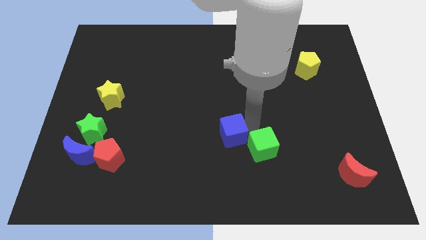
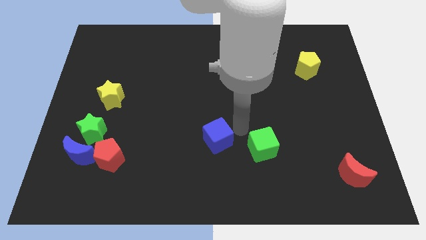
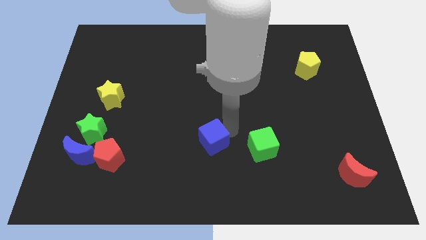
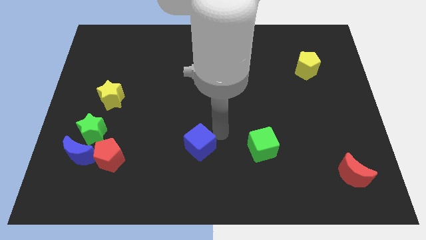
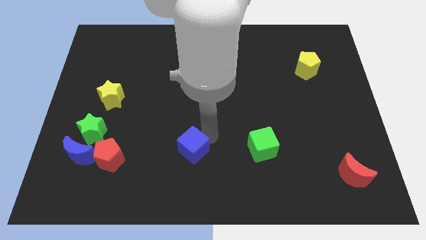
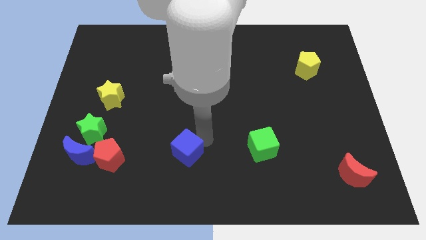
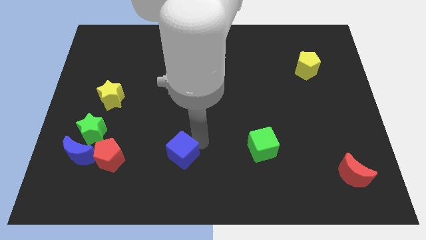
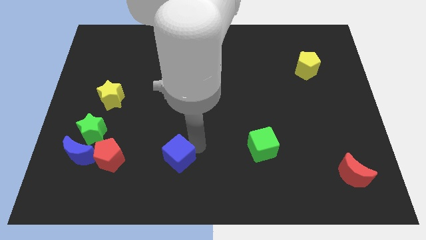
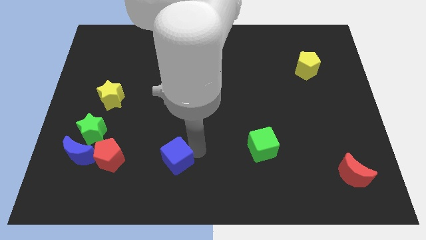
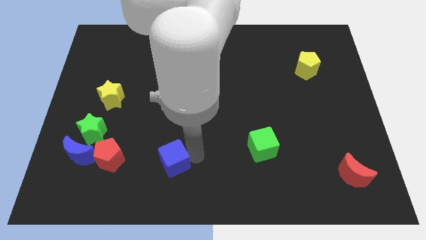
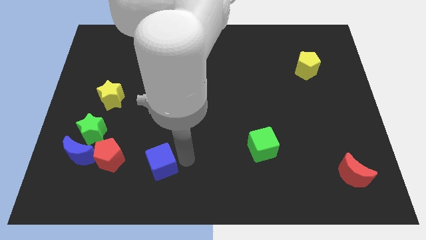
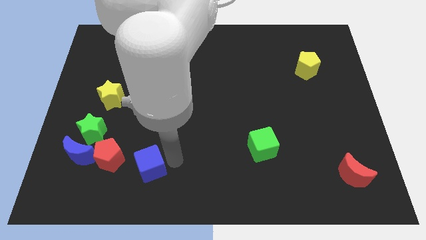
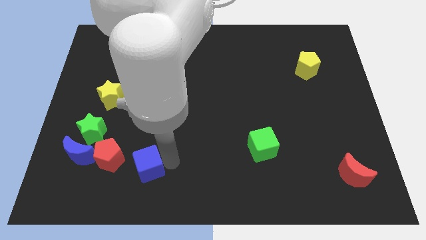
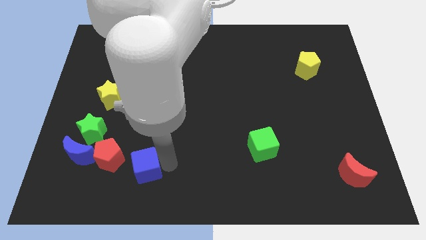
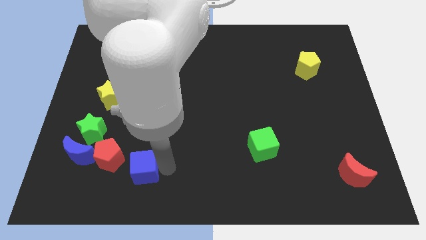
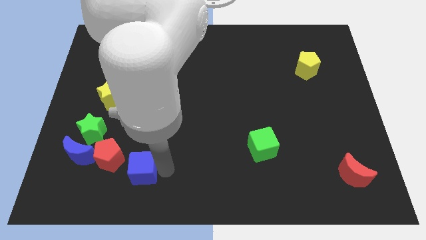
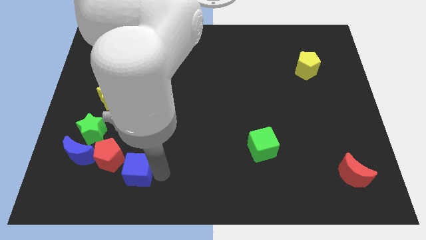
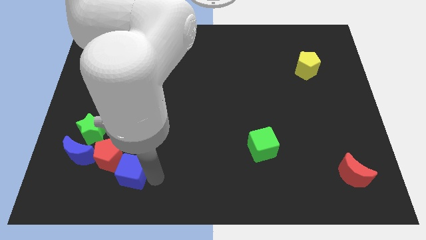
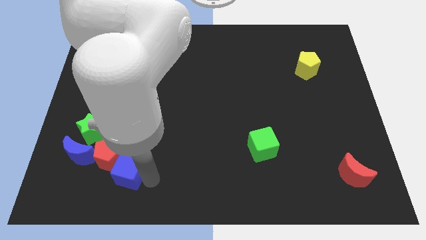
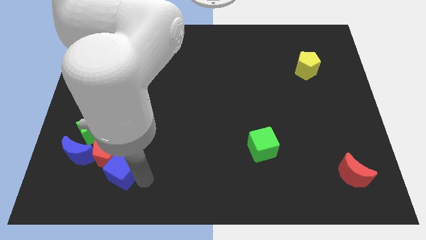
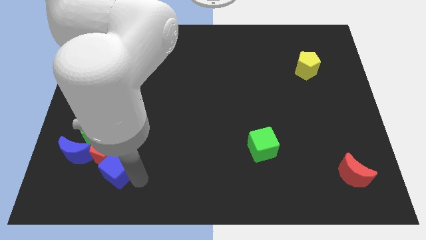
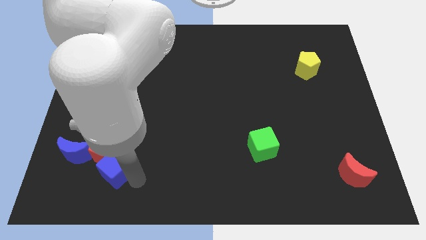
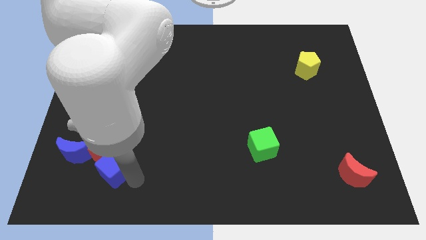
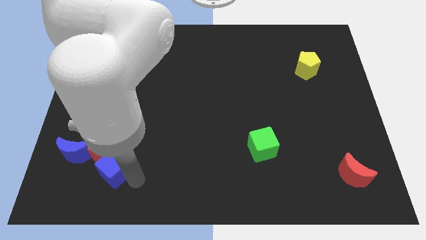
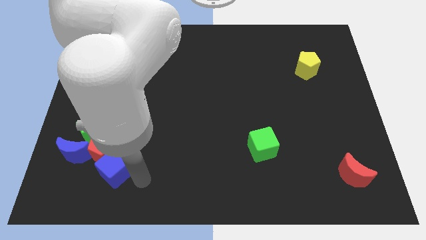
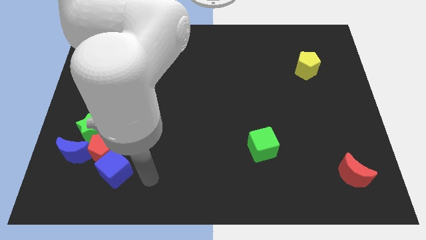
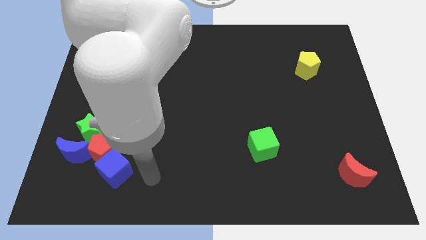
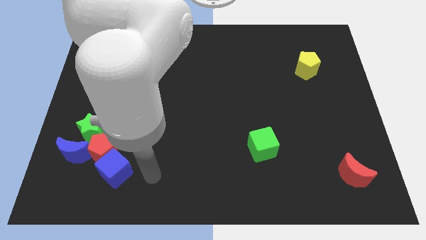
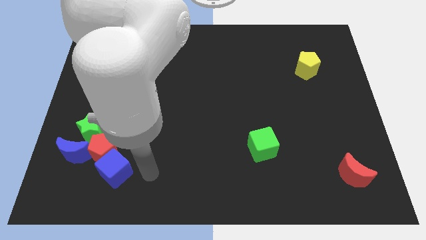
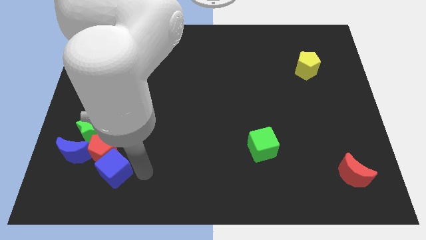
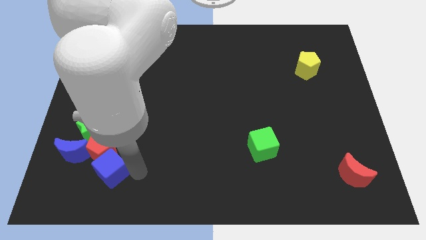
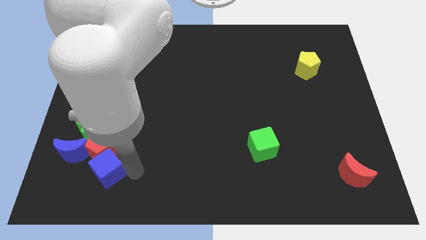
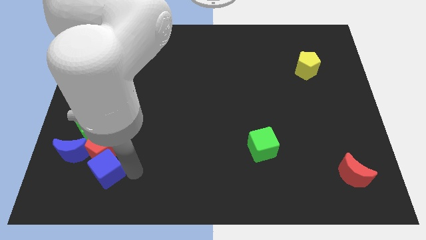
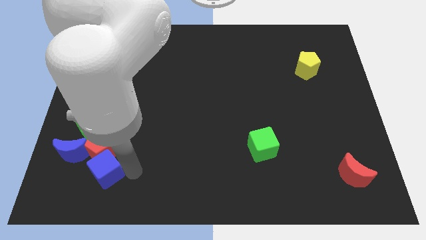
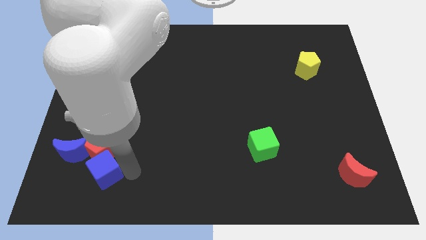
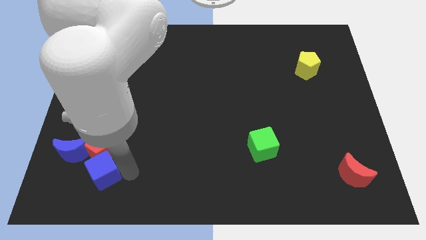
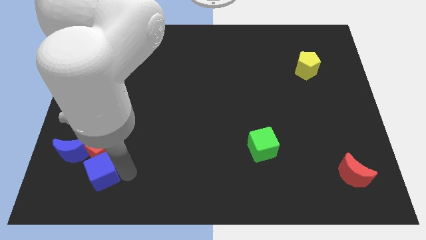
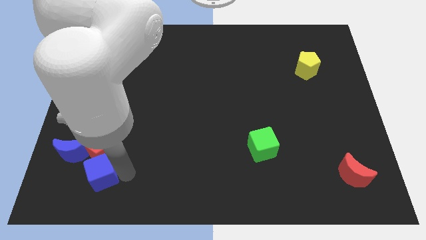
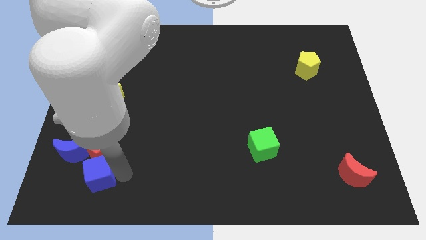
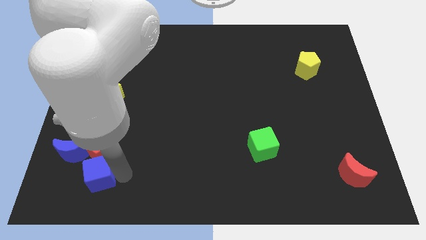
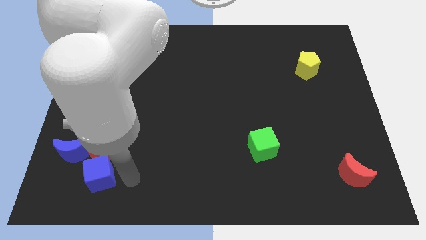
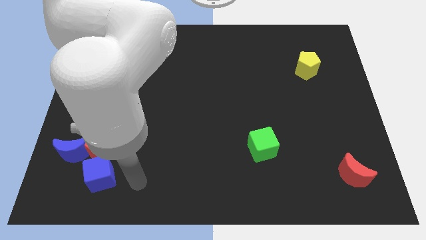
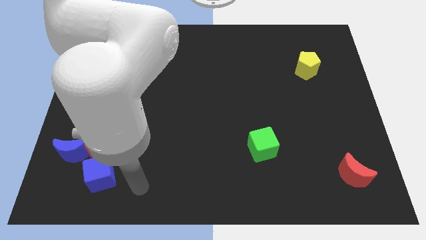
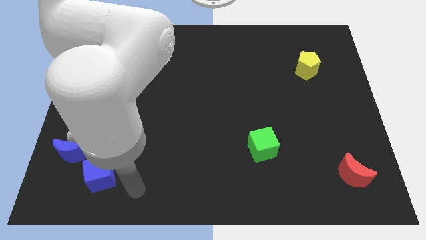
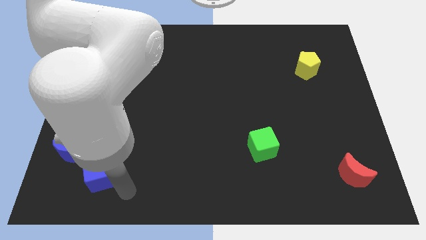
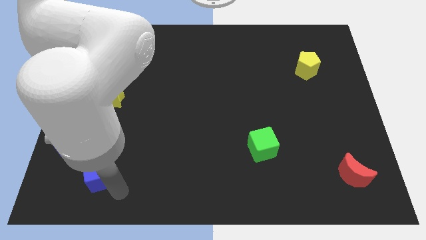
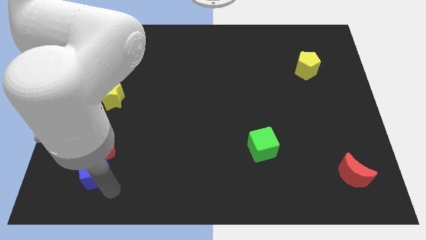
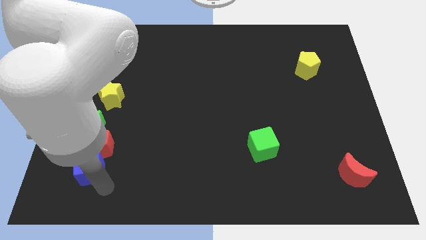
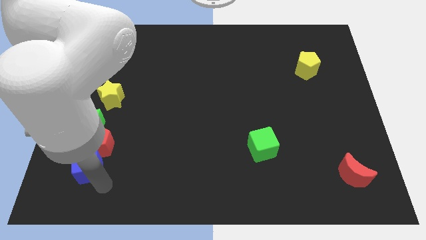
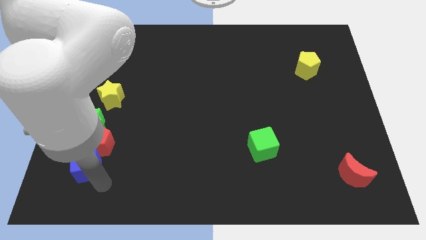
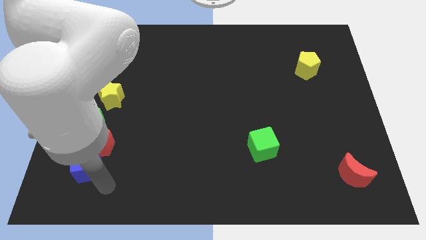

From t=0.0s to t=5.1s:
move the blue cube into the bottom of the red pentagon

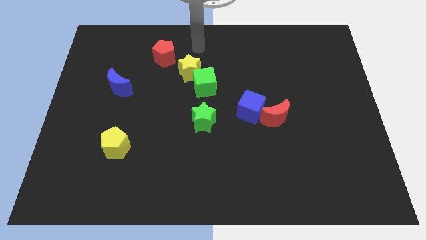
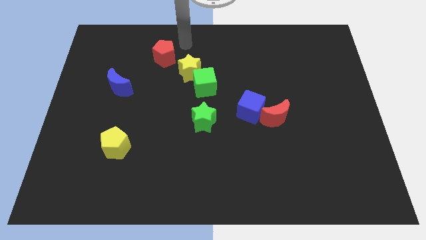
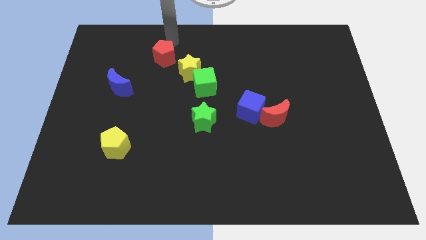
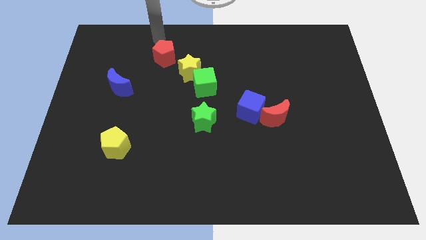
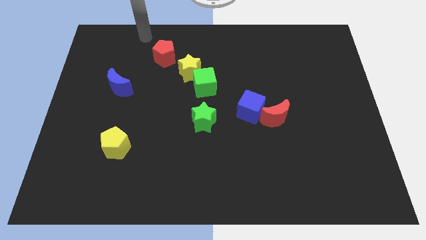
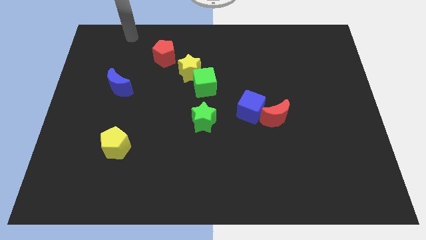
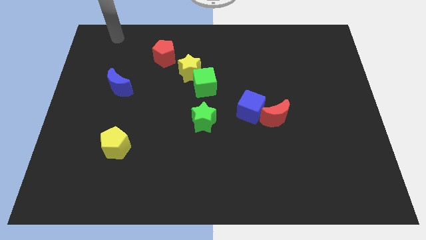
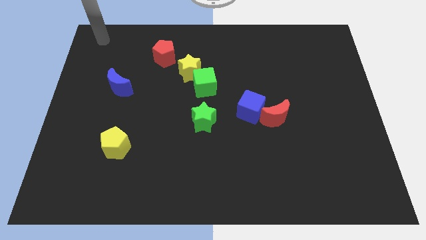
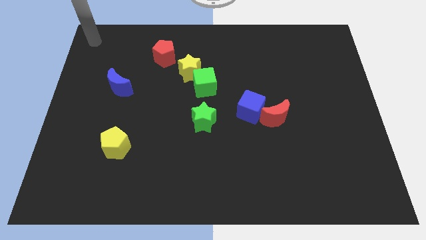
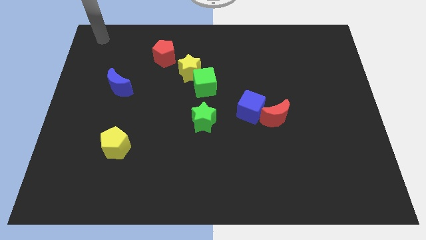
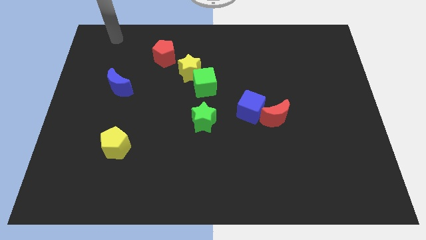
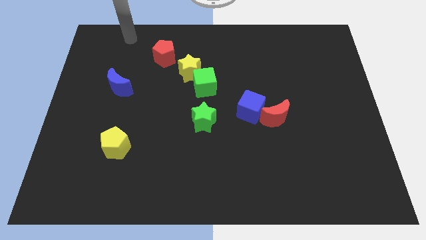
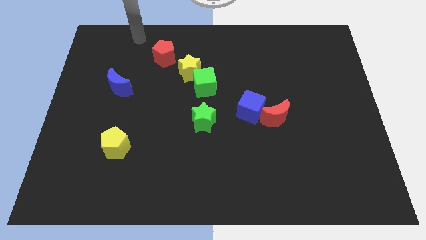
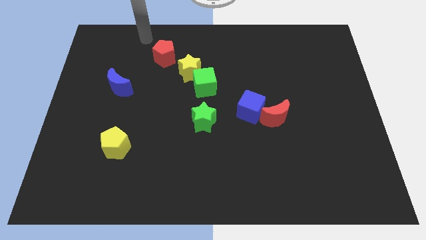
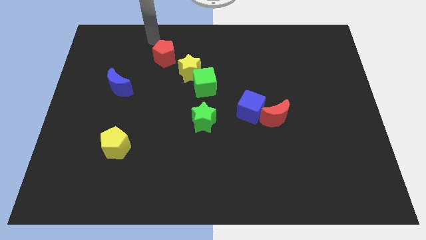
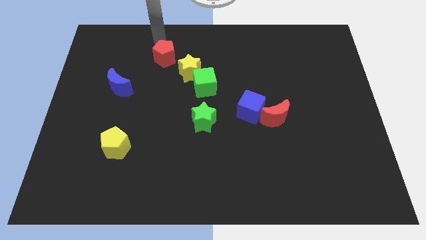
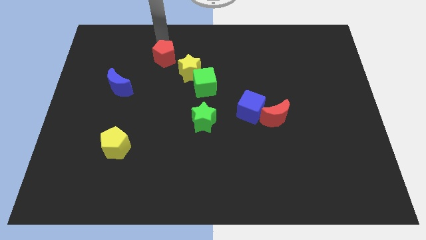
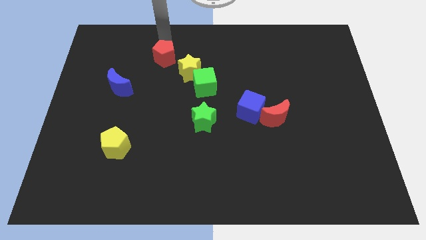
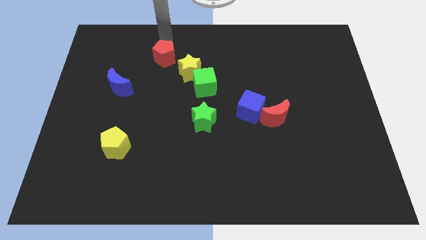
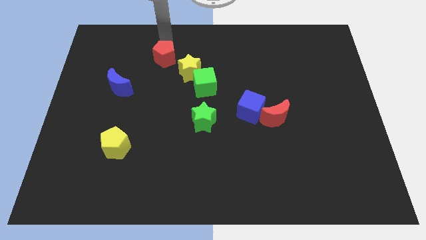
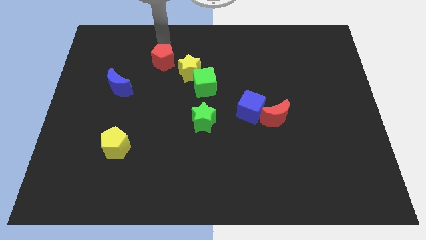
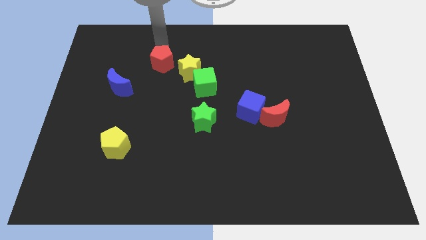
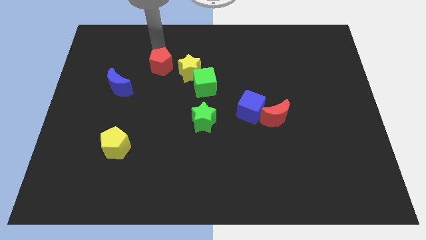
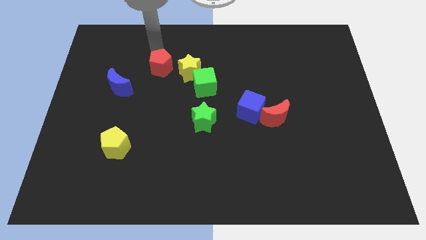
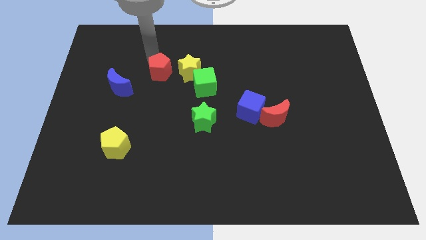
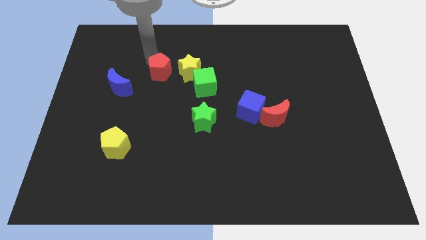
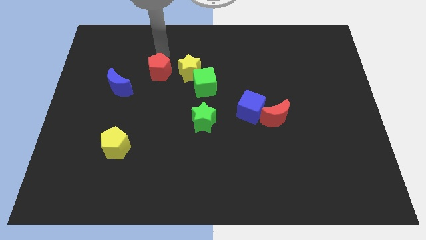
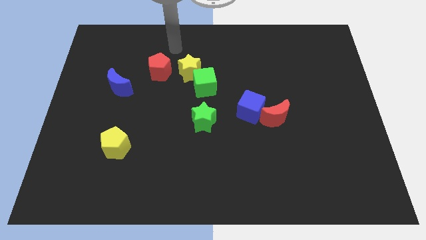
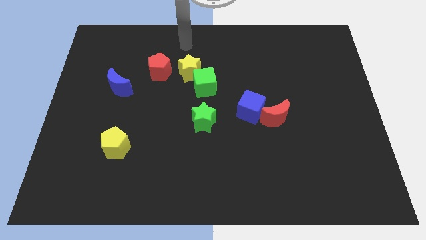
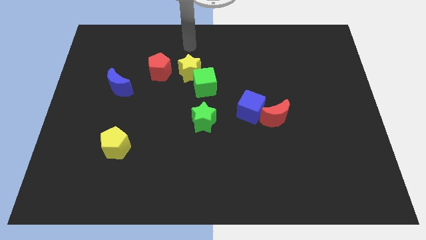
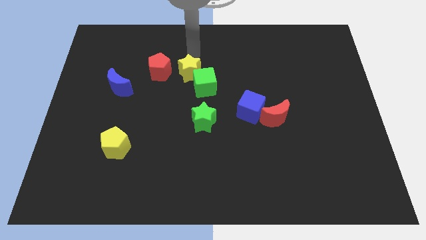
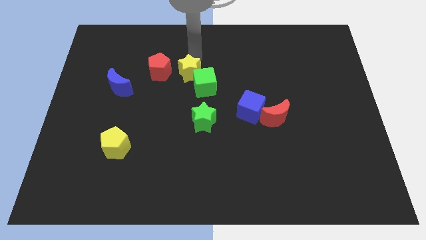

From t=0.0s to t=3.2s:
push the red pentagon left to the yellow star

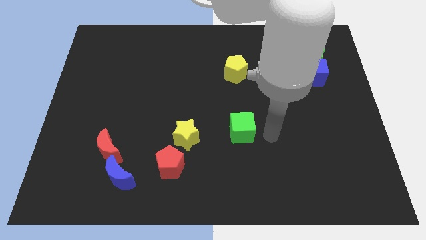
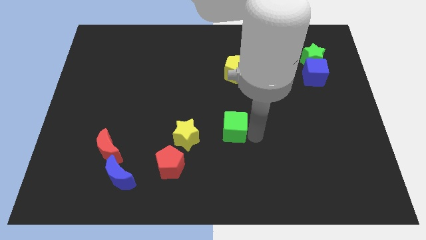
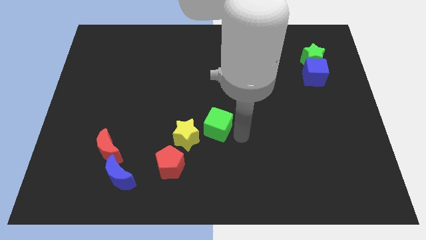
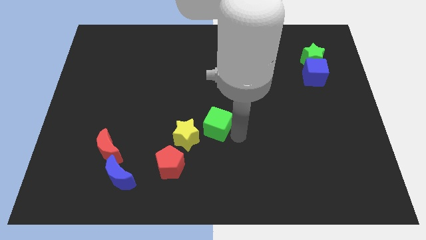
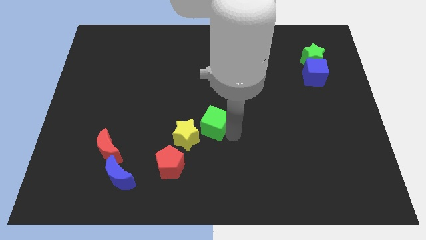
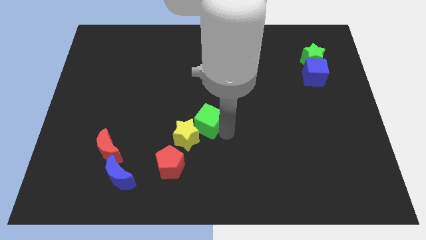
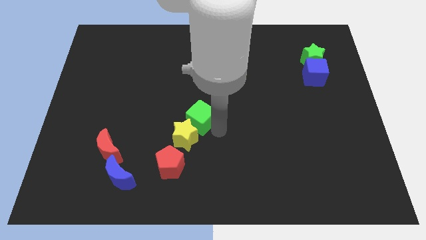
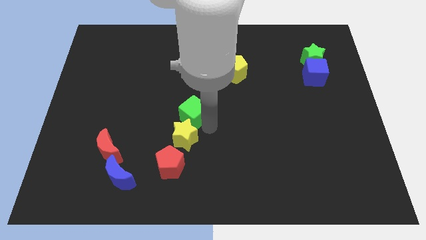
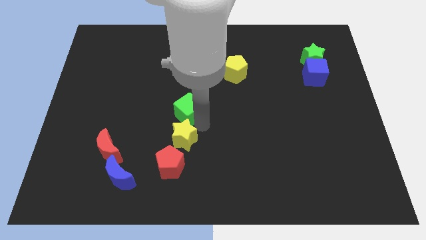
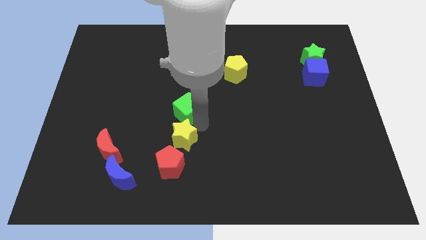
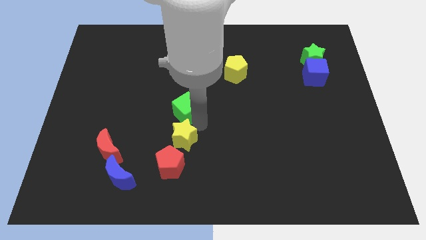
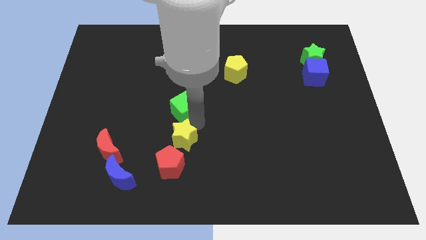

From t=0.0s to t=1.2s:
put the green cube vertically above the yellow star
